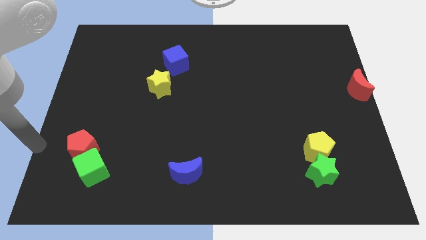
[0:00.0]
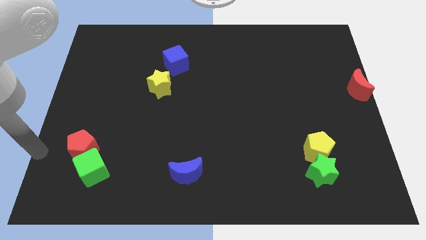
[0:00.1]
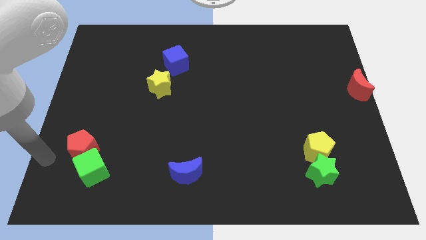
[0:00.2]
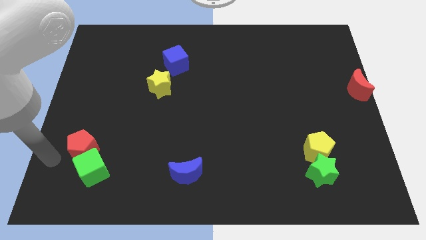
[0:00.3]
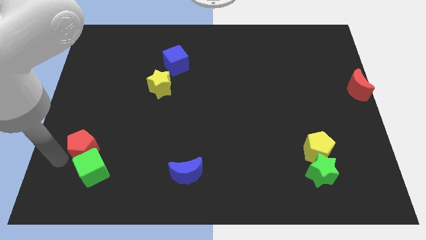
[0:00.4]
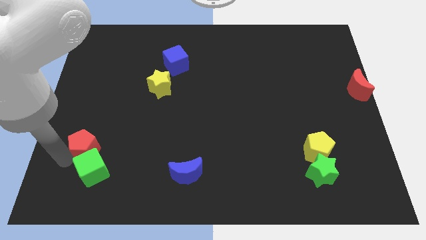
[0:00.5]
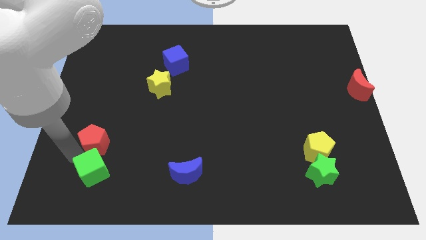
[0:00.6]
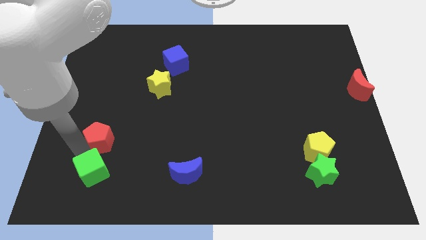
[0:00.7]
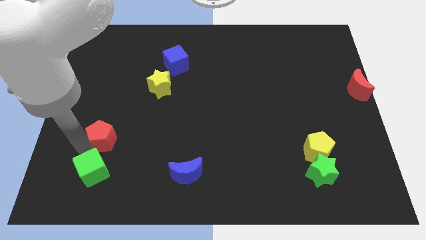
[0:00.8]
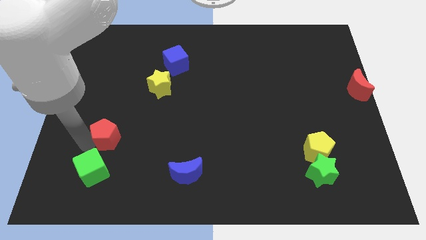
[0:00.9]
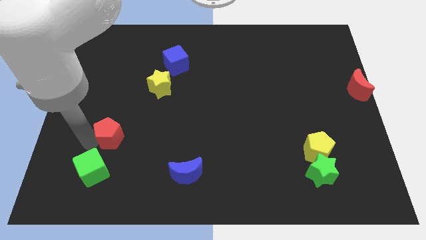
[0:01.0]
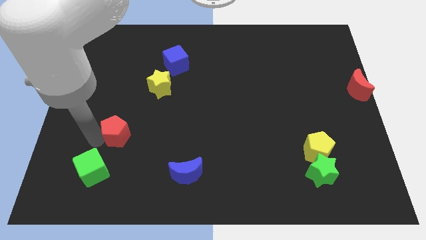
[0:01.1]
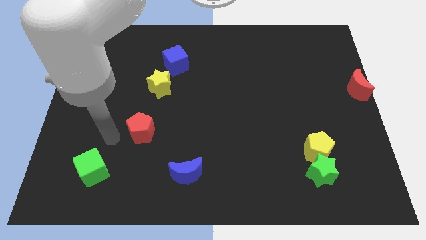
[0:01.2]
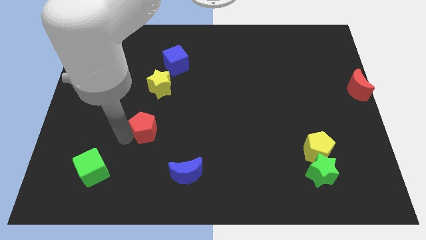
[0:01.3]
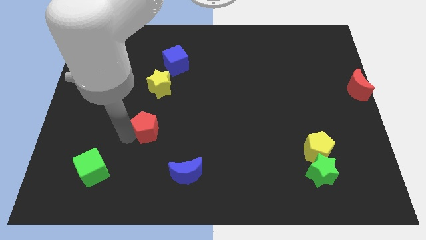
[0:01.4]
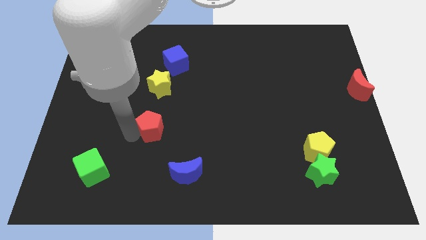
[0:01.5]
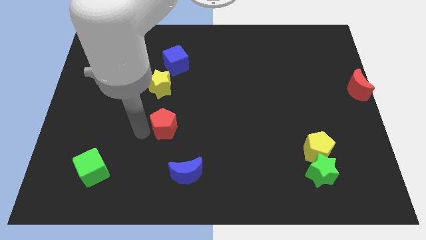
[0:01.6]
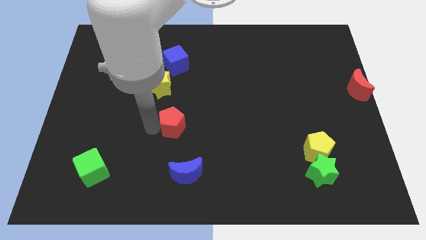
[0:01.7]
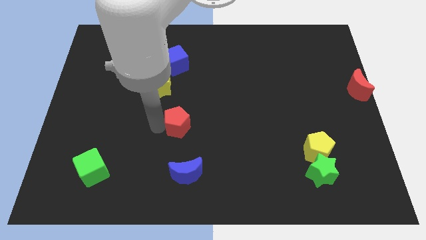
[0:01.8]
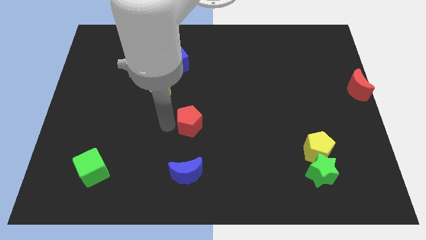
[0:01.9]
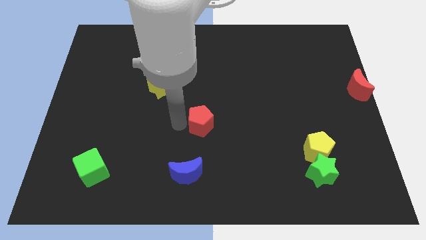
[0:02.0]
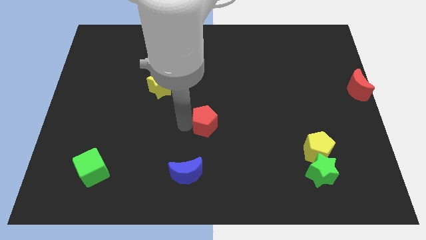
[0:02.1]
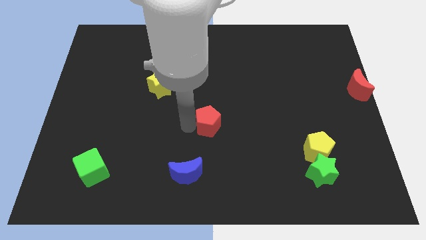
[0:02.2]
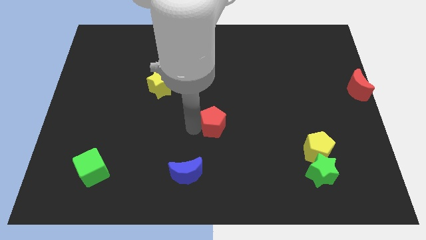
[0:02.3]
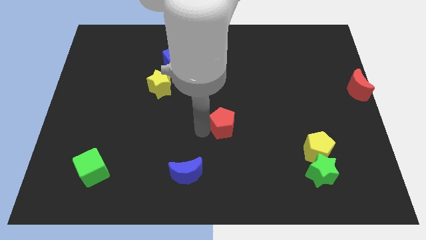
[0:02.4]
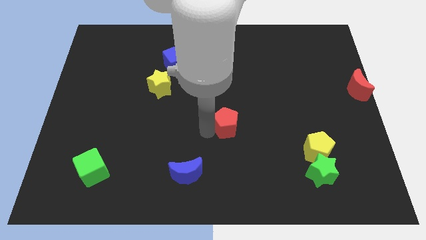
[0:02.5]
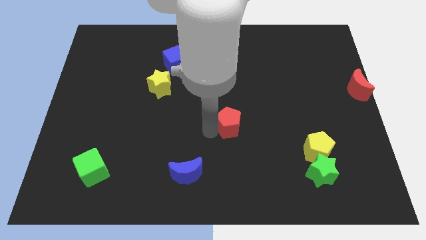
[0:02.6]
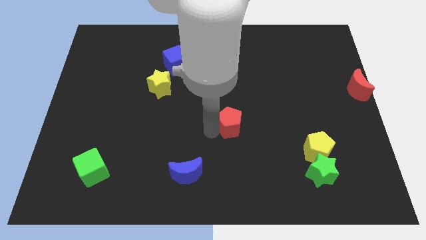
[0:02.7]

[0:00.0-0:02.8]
move red pentagon to the middle of the board

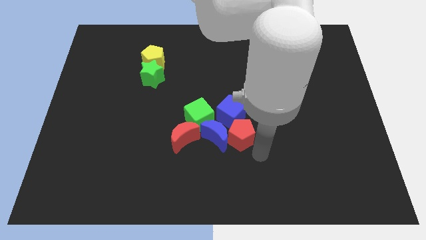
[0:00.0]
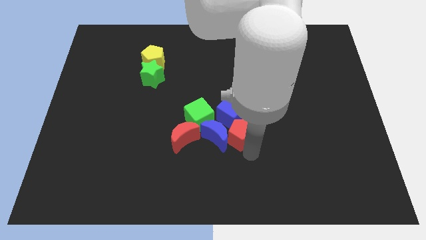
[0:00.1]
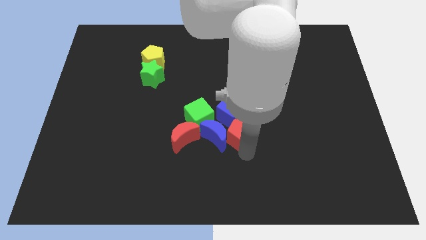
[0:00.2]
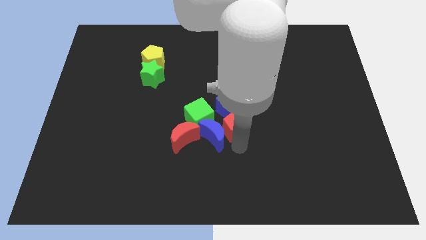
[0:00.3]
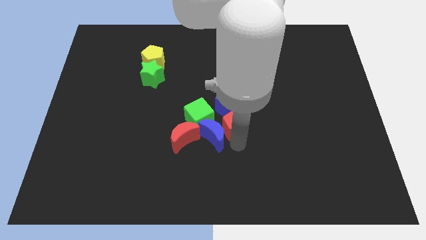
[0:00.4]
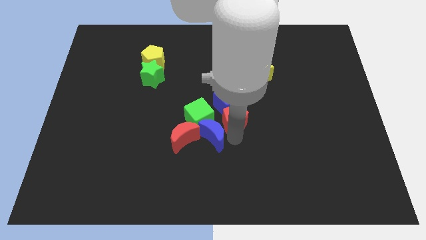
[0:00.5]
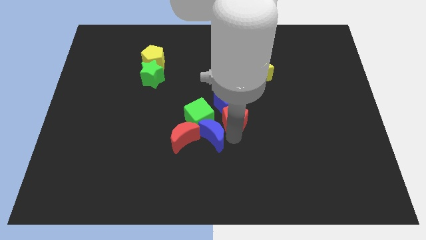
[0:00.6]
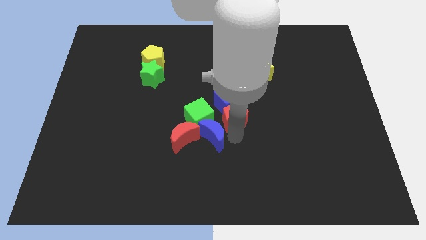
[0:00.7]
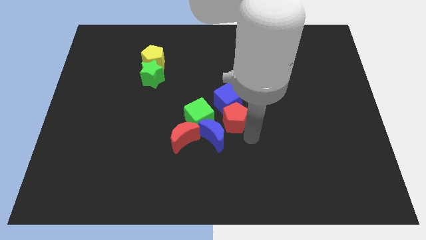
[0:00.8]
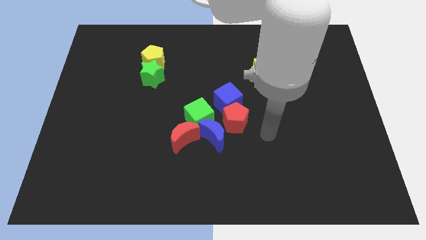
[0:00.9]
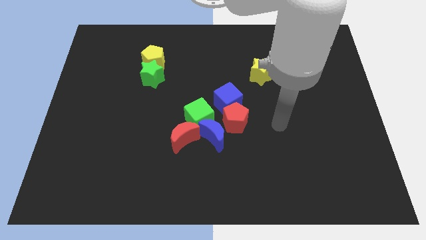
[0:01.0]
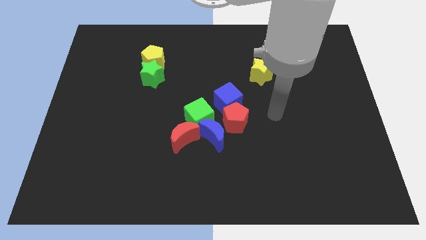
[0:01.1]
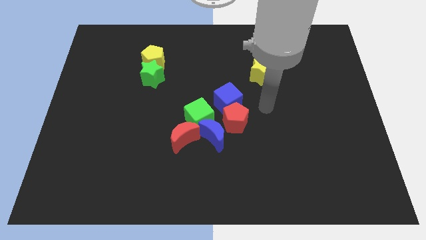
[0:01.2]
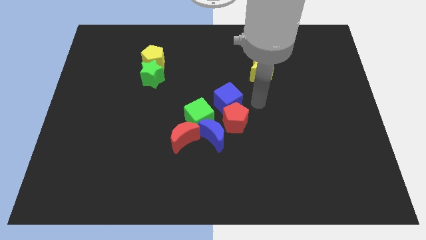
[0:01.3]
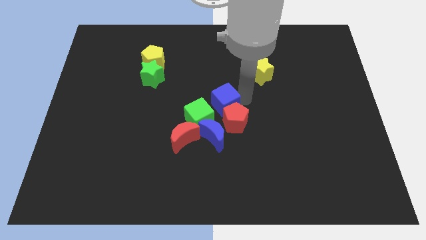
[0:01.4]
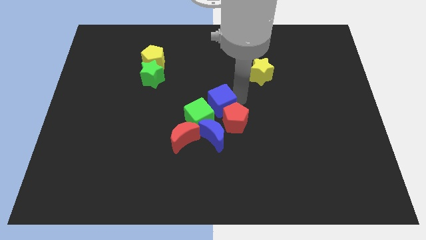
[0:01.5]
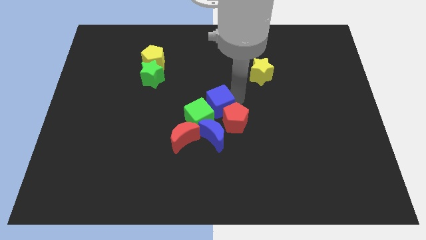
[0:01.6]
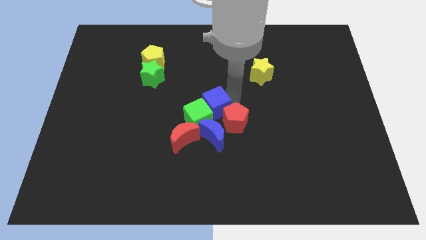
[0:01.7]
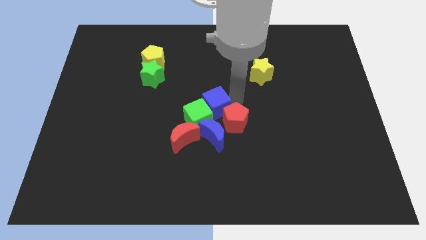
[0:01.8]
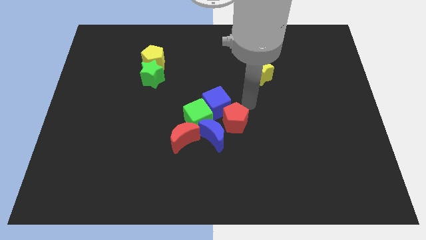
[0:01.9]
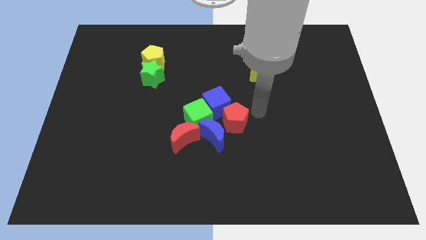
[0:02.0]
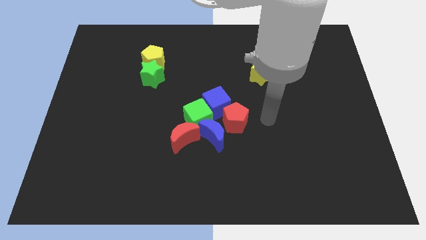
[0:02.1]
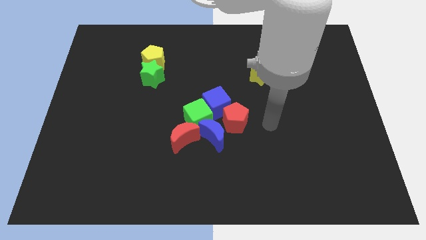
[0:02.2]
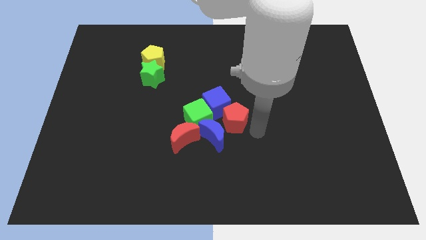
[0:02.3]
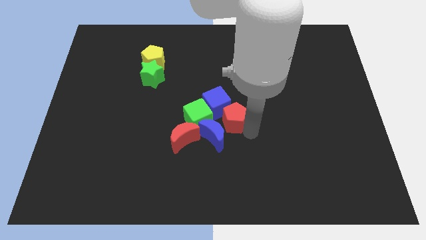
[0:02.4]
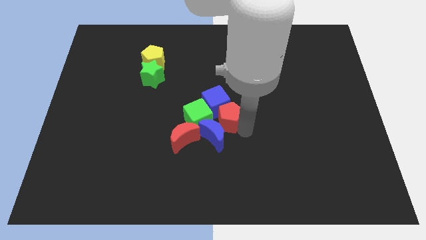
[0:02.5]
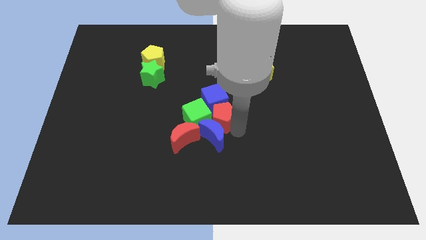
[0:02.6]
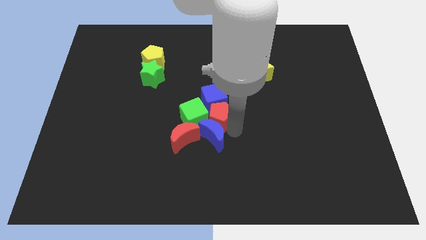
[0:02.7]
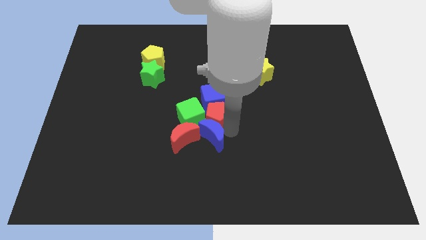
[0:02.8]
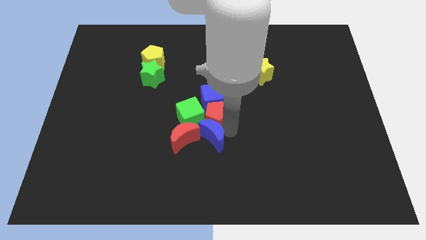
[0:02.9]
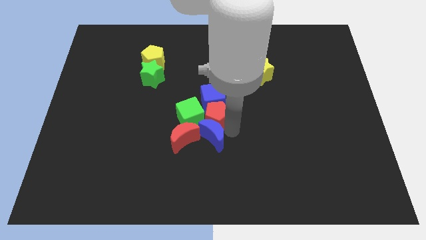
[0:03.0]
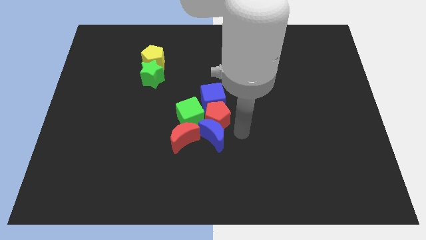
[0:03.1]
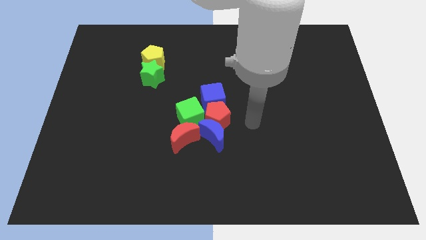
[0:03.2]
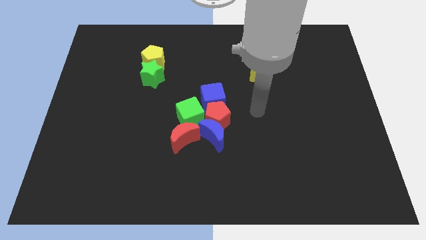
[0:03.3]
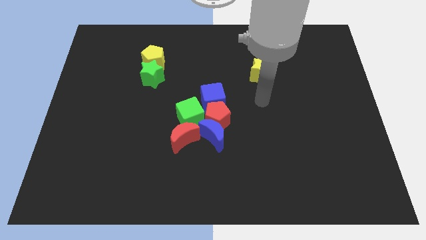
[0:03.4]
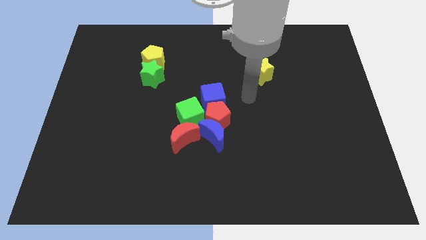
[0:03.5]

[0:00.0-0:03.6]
push the blocks into each other

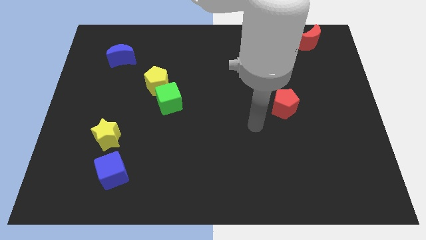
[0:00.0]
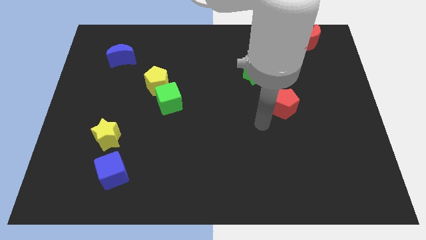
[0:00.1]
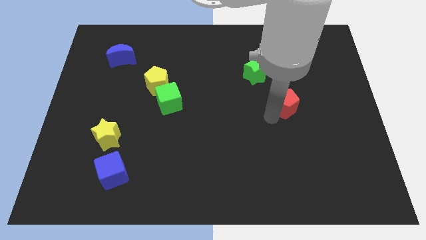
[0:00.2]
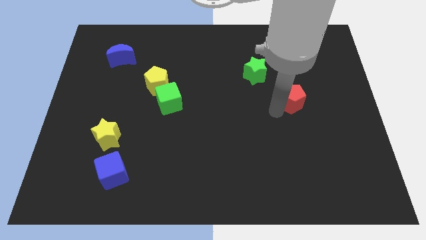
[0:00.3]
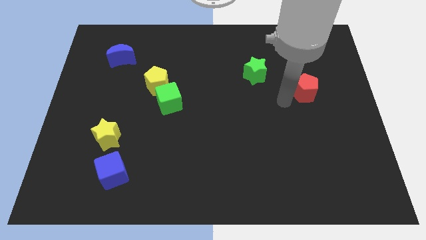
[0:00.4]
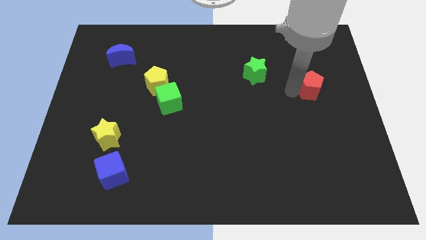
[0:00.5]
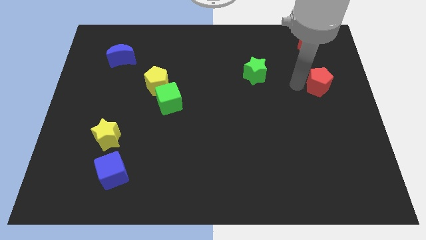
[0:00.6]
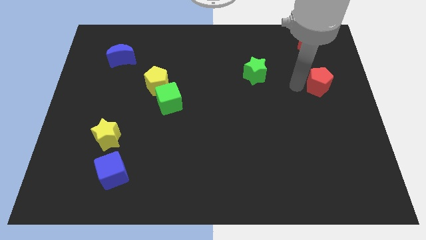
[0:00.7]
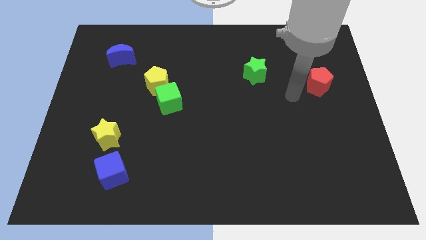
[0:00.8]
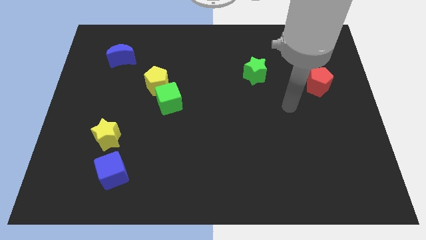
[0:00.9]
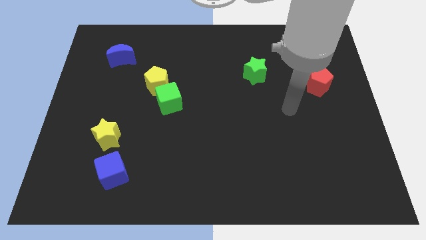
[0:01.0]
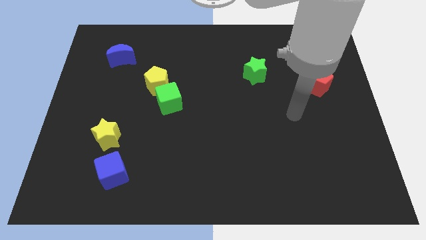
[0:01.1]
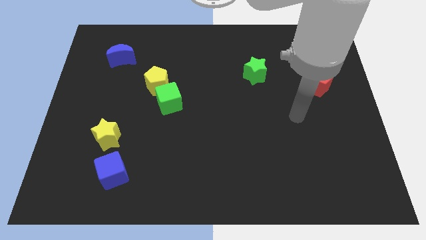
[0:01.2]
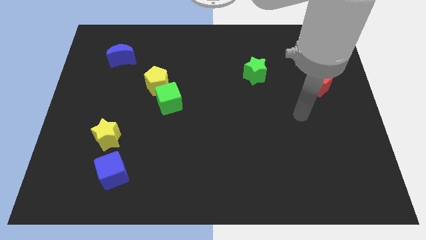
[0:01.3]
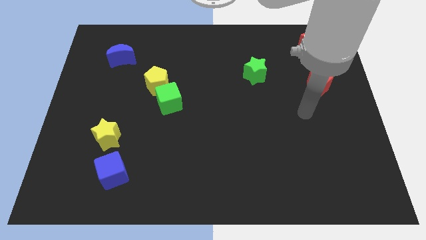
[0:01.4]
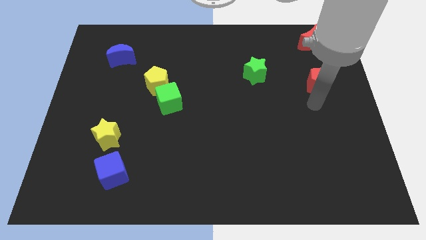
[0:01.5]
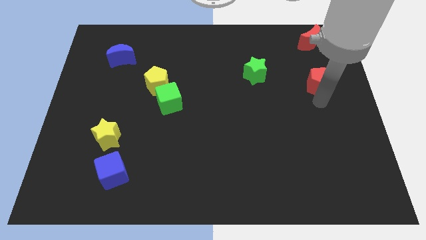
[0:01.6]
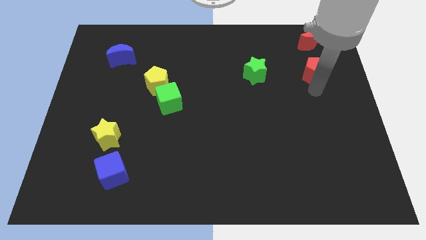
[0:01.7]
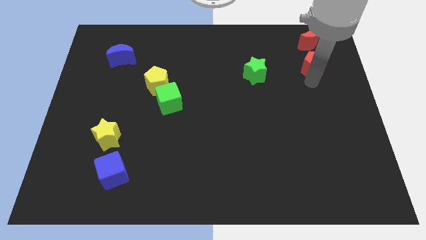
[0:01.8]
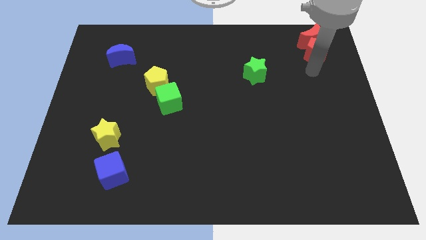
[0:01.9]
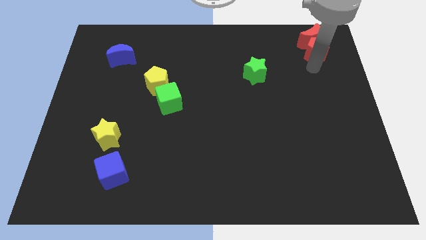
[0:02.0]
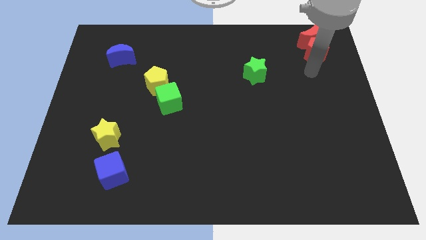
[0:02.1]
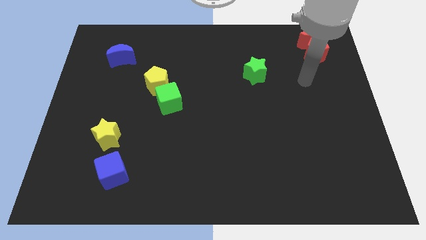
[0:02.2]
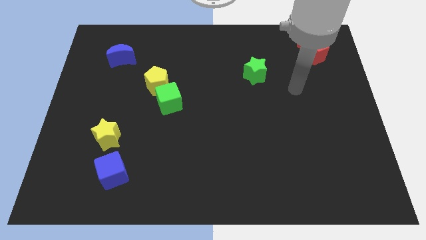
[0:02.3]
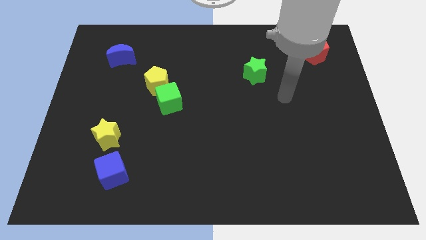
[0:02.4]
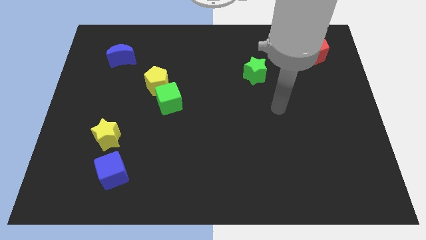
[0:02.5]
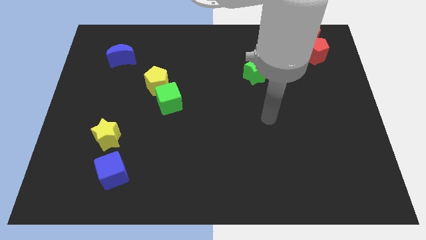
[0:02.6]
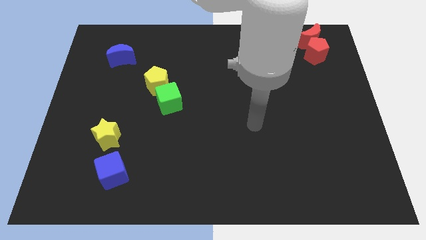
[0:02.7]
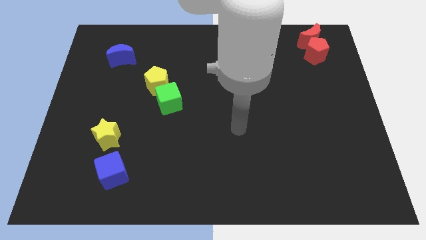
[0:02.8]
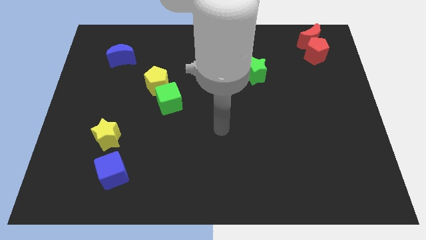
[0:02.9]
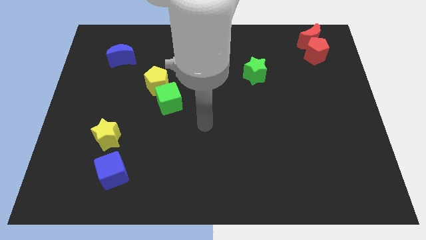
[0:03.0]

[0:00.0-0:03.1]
place red pentagon below the red moon
